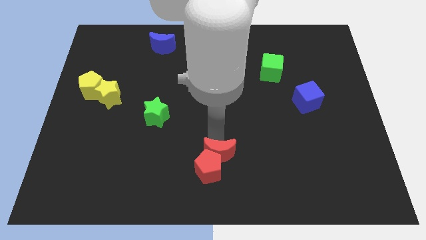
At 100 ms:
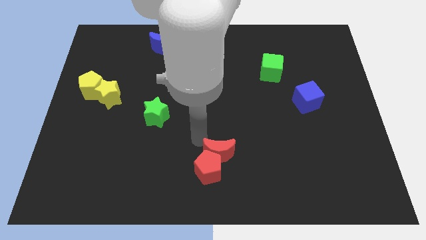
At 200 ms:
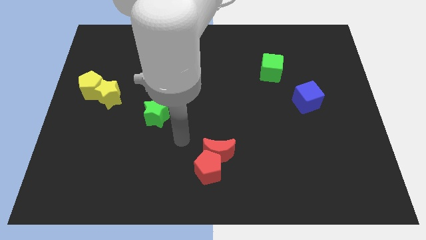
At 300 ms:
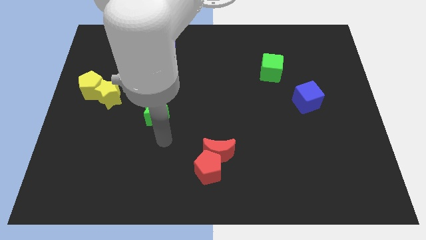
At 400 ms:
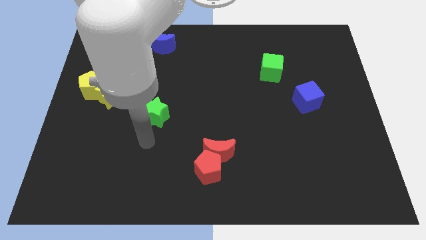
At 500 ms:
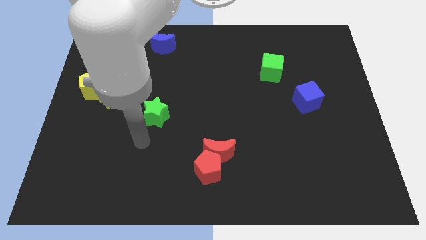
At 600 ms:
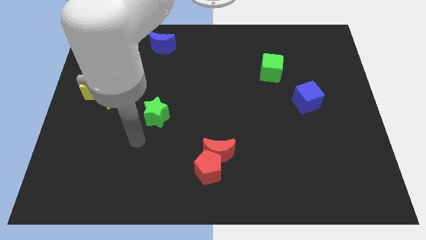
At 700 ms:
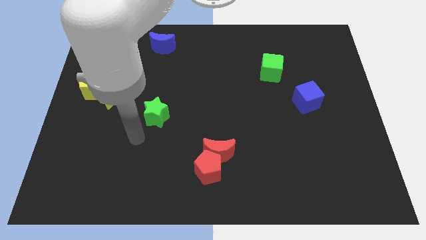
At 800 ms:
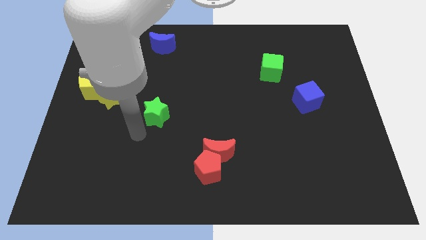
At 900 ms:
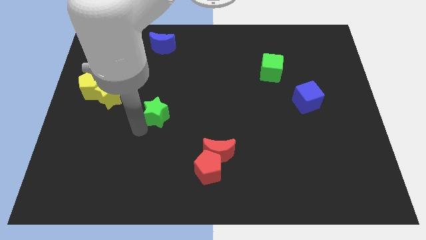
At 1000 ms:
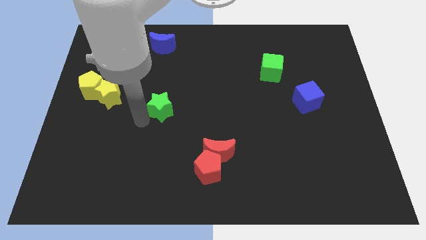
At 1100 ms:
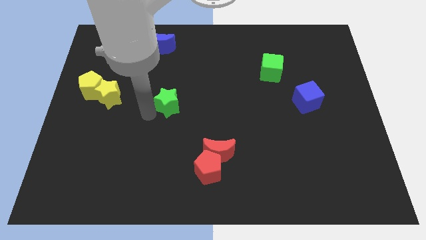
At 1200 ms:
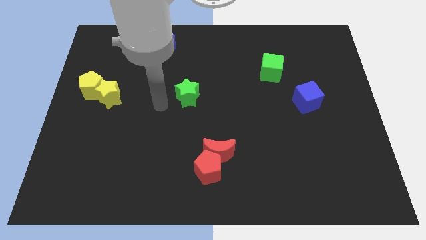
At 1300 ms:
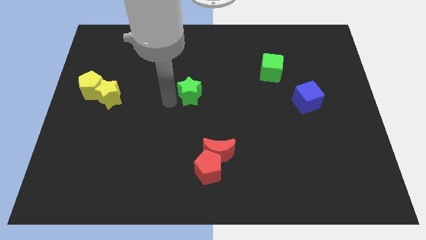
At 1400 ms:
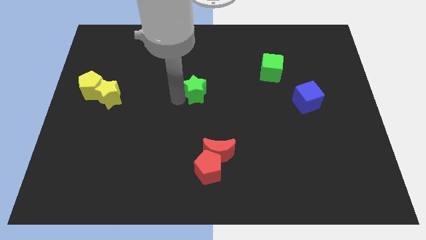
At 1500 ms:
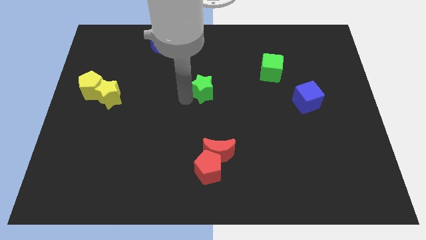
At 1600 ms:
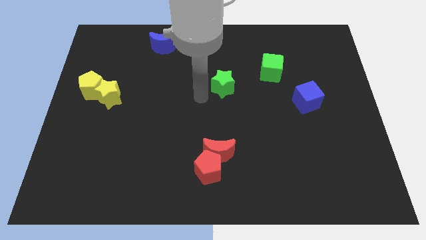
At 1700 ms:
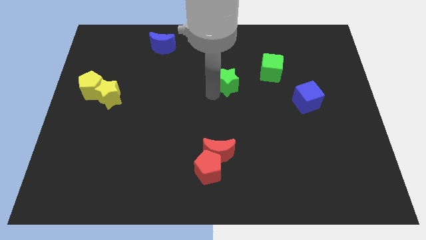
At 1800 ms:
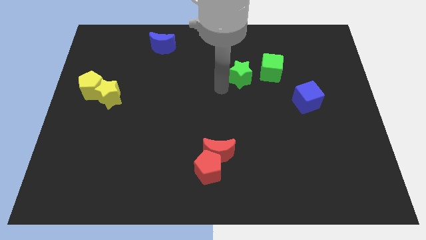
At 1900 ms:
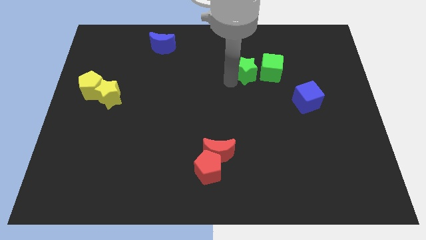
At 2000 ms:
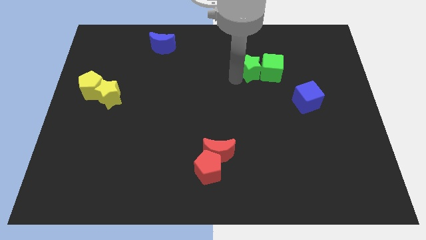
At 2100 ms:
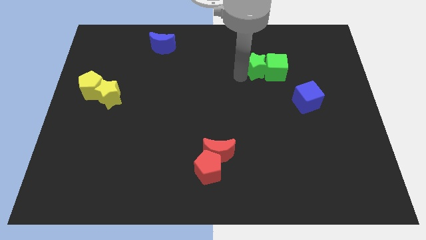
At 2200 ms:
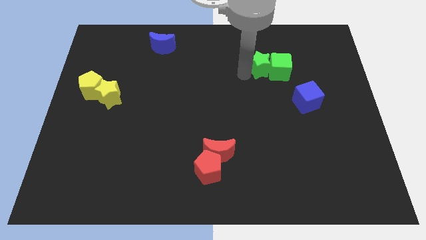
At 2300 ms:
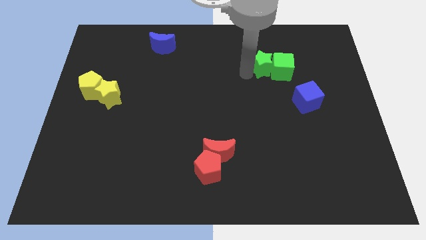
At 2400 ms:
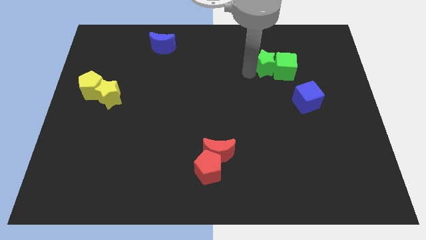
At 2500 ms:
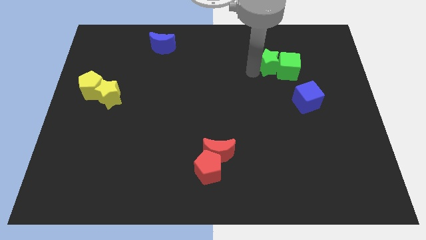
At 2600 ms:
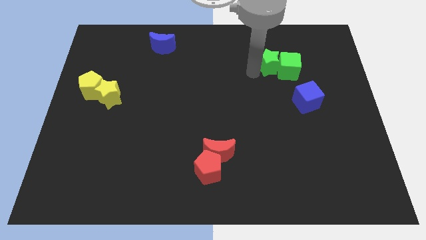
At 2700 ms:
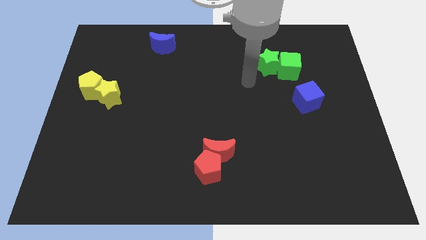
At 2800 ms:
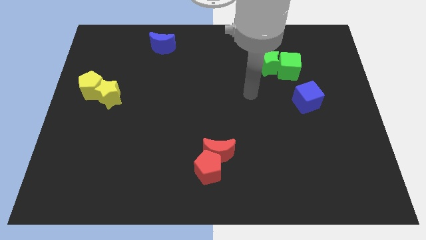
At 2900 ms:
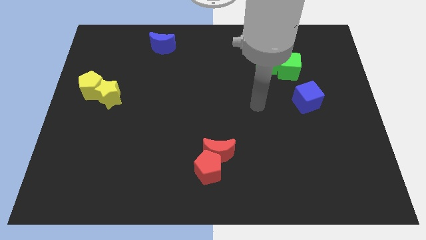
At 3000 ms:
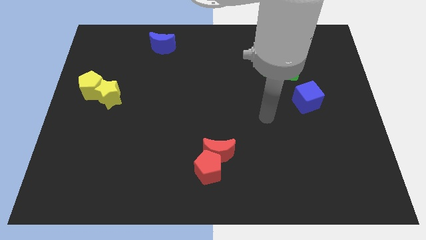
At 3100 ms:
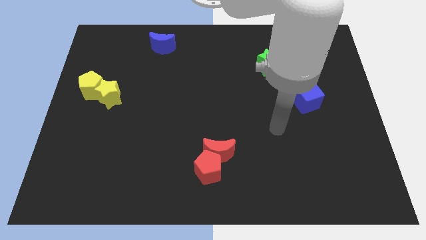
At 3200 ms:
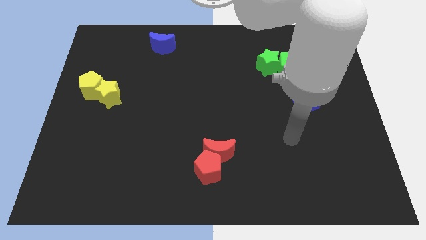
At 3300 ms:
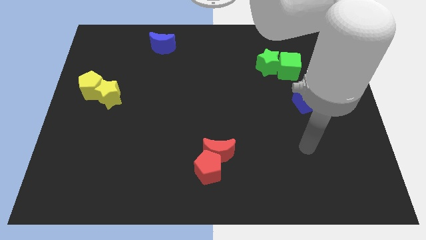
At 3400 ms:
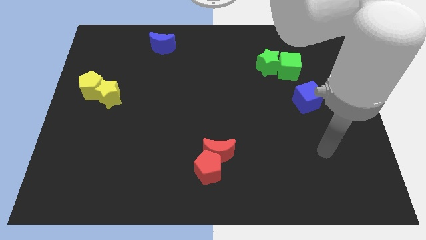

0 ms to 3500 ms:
push the green star into the green cube

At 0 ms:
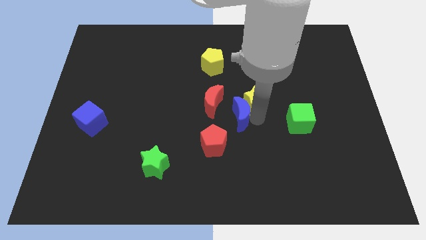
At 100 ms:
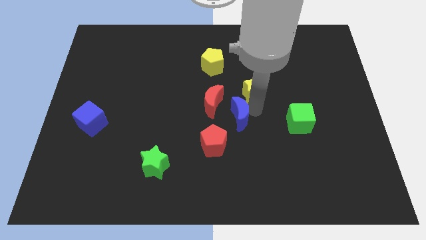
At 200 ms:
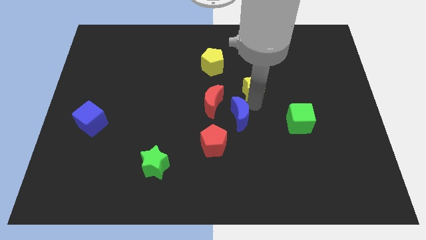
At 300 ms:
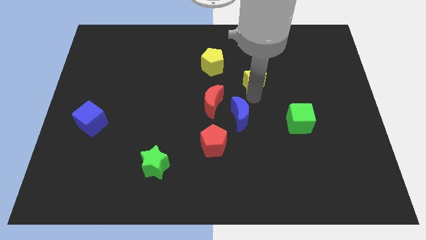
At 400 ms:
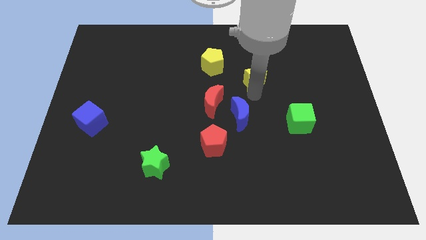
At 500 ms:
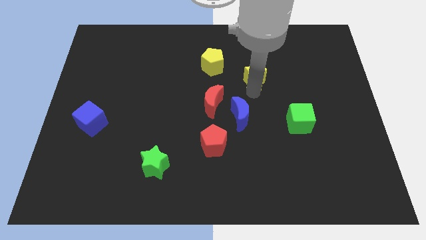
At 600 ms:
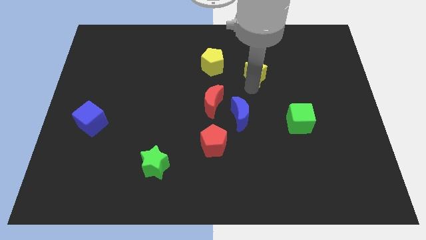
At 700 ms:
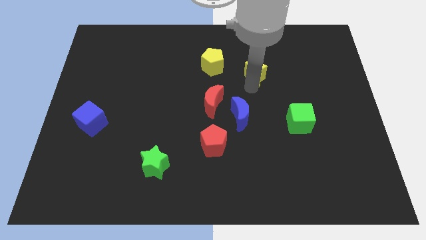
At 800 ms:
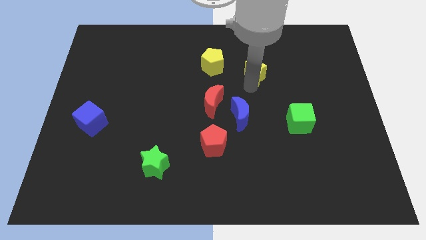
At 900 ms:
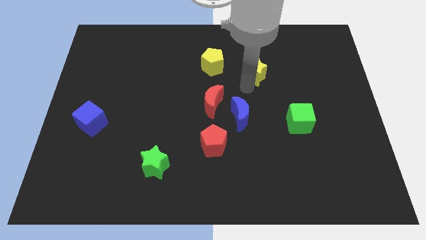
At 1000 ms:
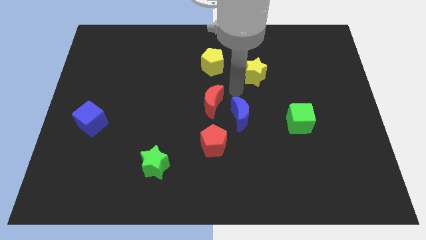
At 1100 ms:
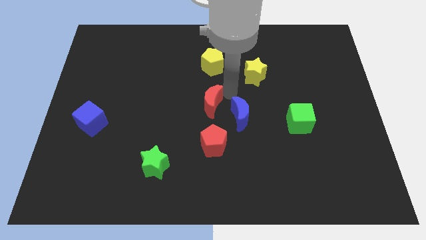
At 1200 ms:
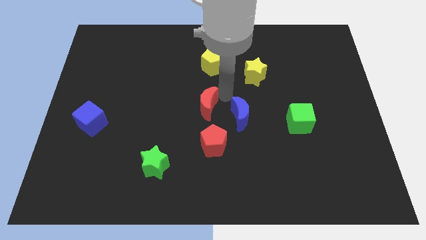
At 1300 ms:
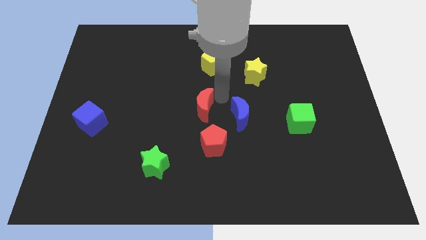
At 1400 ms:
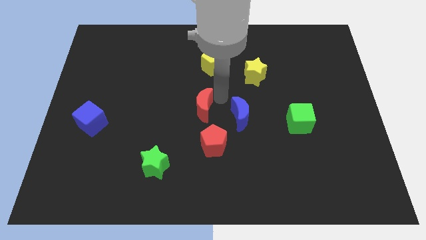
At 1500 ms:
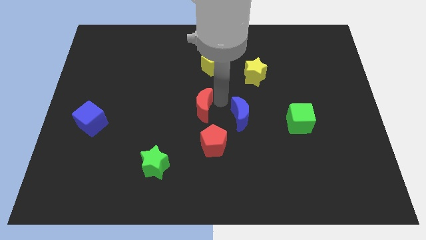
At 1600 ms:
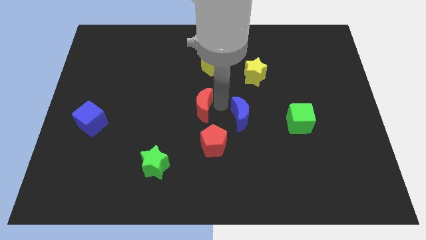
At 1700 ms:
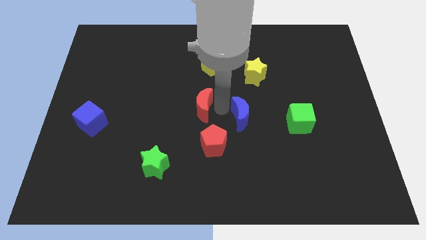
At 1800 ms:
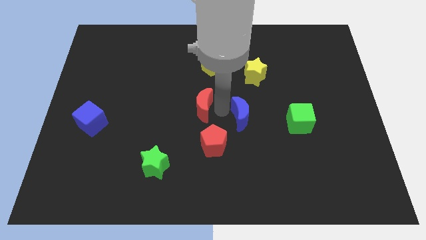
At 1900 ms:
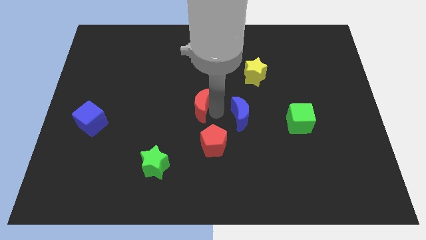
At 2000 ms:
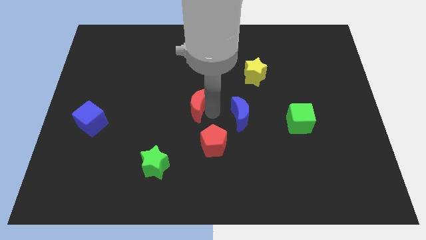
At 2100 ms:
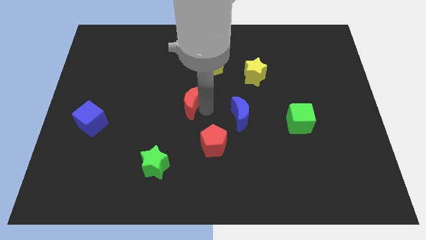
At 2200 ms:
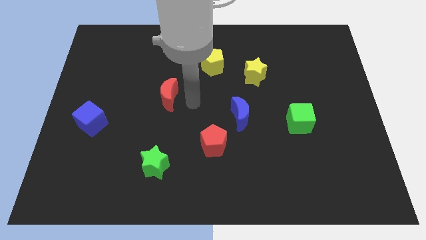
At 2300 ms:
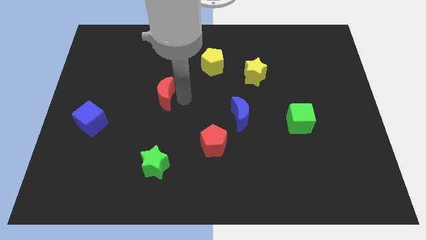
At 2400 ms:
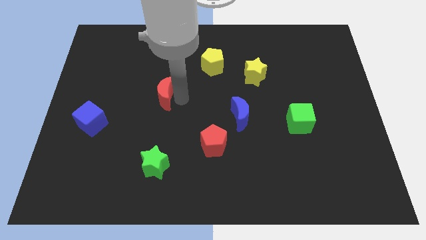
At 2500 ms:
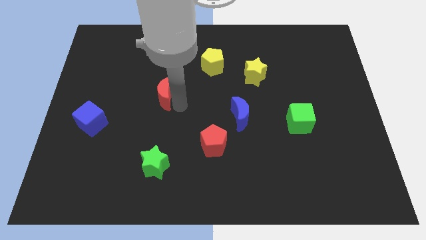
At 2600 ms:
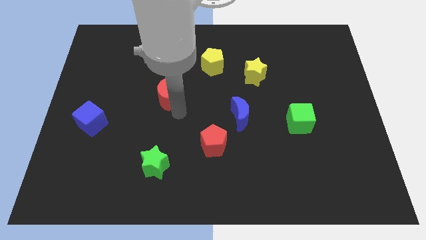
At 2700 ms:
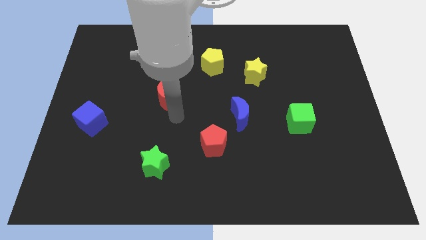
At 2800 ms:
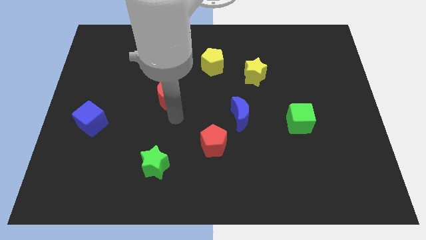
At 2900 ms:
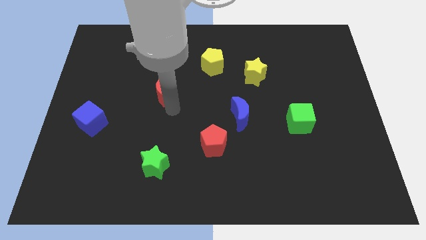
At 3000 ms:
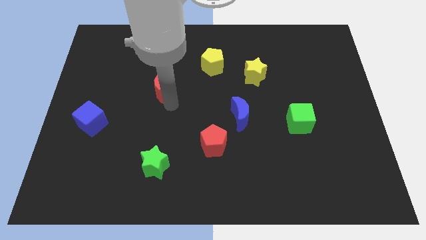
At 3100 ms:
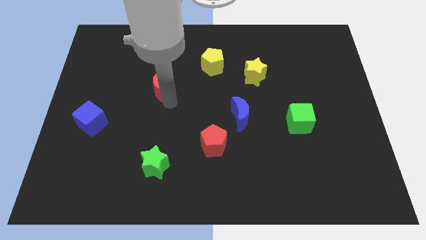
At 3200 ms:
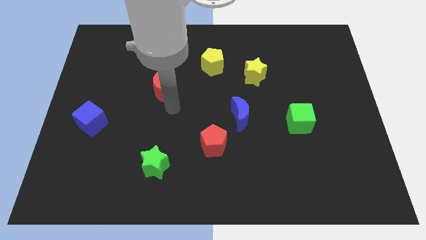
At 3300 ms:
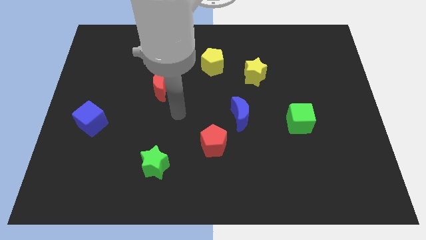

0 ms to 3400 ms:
push the red crescent and yellow star diagonal to each other

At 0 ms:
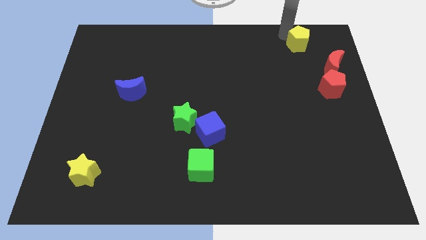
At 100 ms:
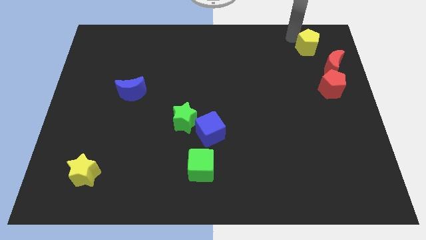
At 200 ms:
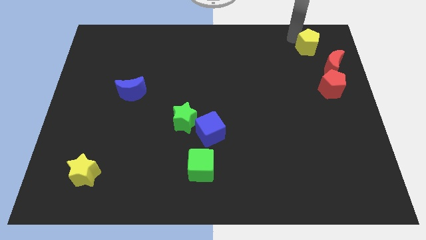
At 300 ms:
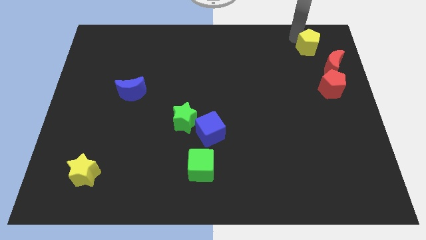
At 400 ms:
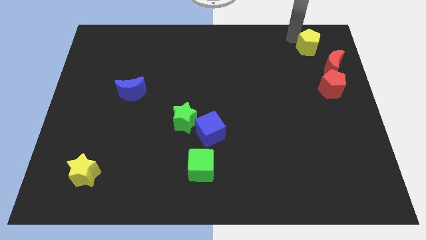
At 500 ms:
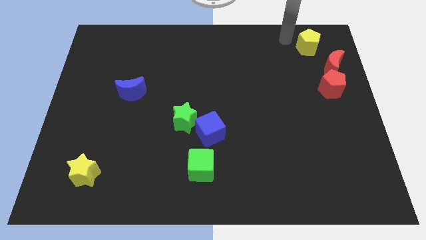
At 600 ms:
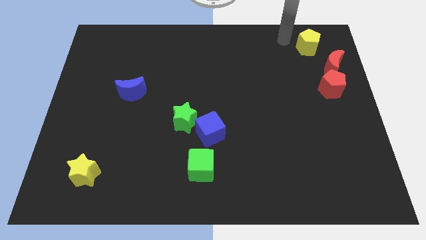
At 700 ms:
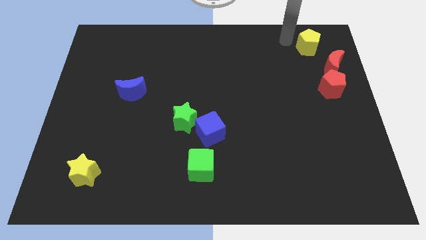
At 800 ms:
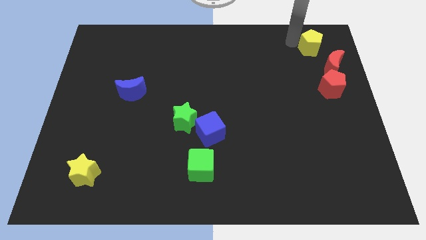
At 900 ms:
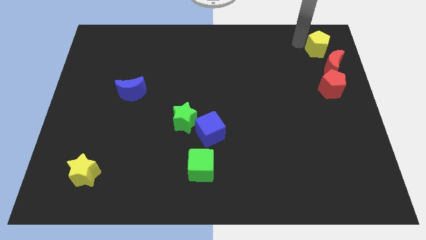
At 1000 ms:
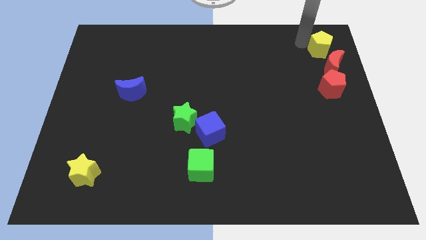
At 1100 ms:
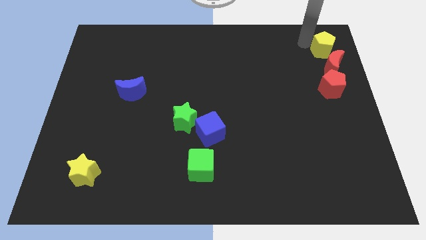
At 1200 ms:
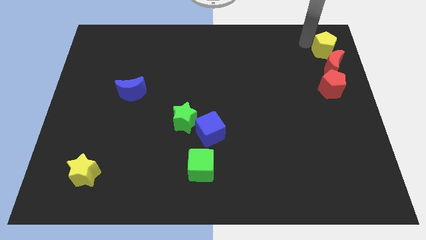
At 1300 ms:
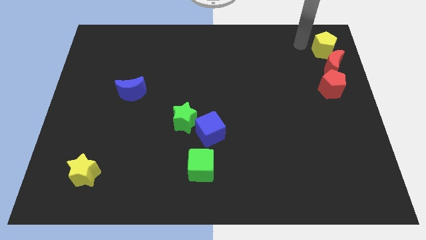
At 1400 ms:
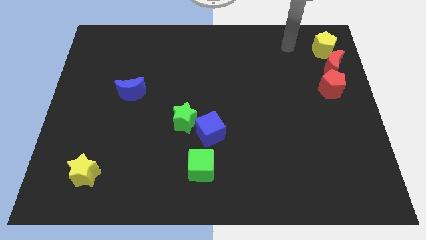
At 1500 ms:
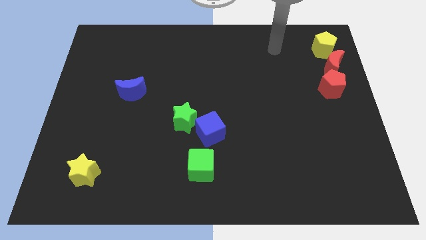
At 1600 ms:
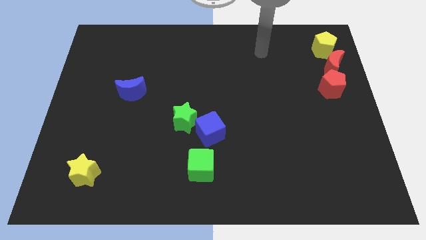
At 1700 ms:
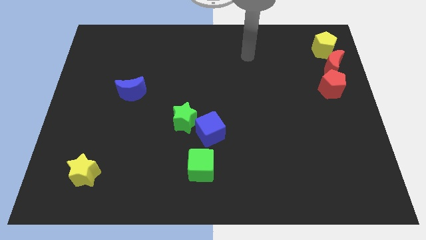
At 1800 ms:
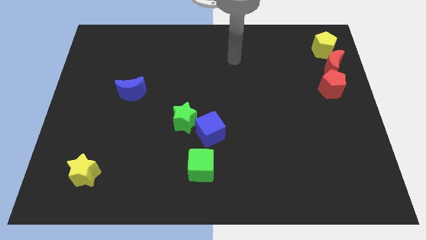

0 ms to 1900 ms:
place yellow pentagon at the top right corner

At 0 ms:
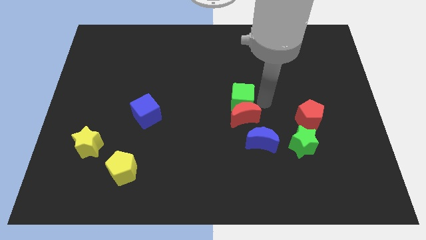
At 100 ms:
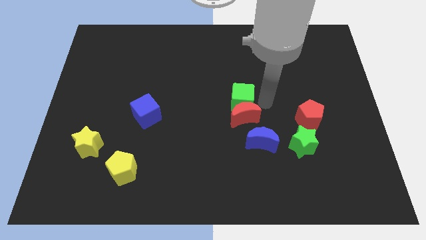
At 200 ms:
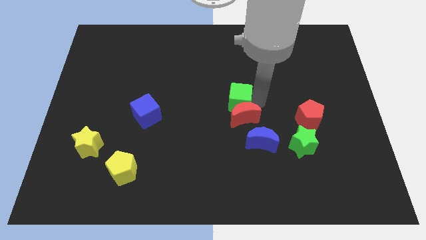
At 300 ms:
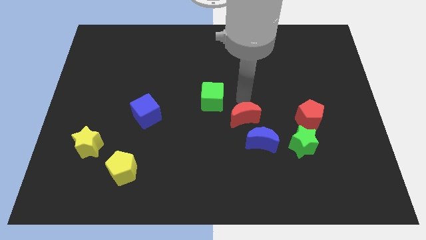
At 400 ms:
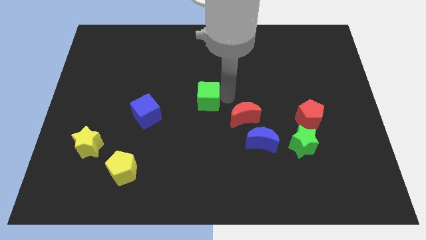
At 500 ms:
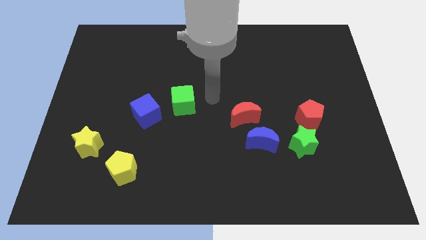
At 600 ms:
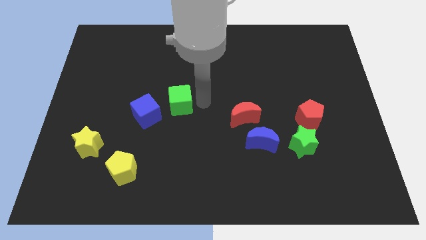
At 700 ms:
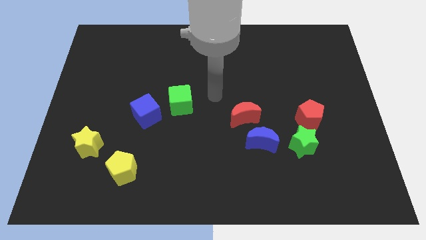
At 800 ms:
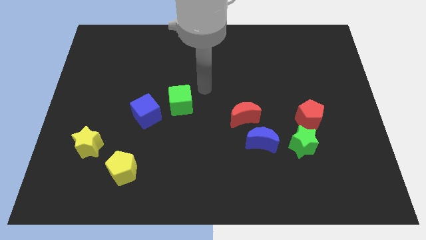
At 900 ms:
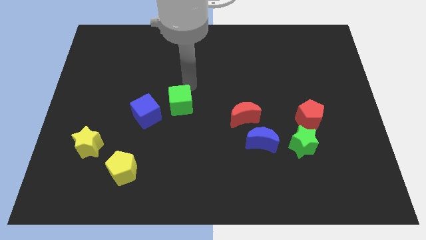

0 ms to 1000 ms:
slide the green cube close to the blue cube
